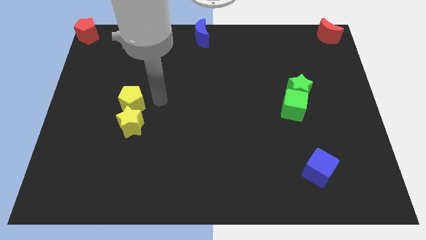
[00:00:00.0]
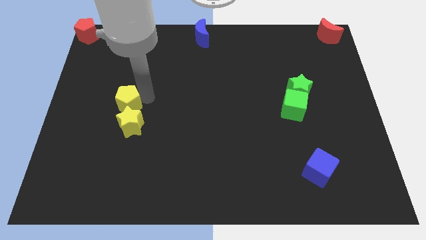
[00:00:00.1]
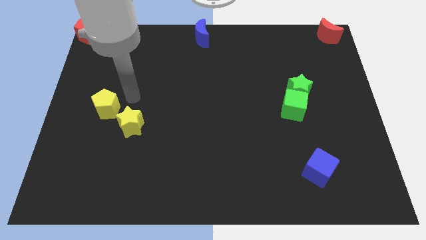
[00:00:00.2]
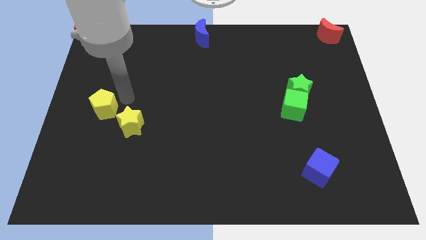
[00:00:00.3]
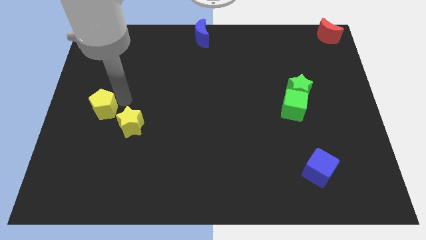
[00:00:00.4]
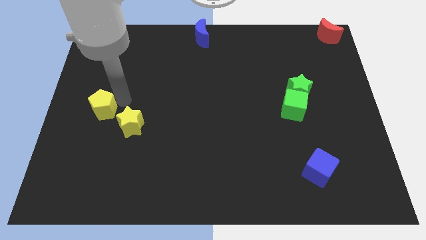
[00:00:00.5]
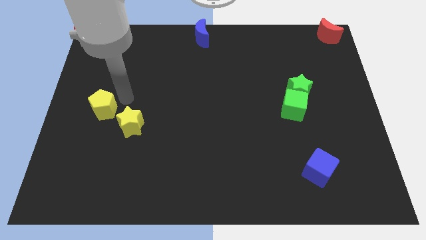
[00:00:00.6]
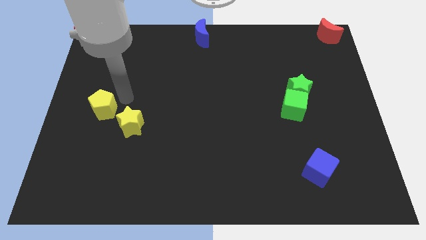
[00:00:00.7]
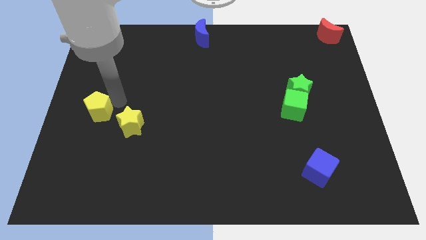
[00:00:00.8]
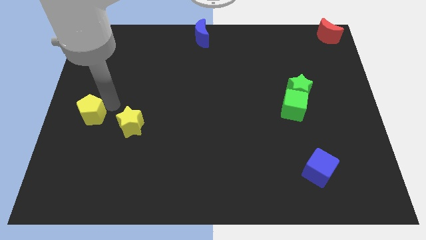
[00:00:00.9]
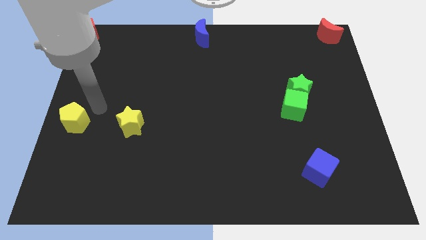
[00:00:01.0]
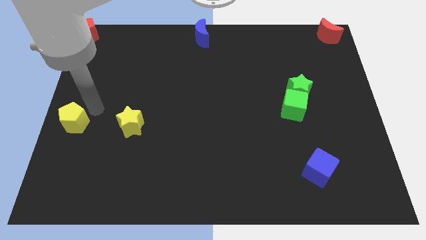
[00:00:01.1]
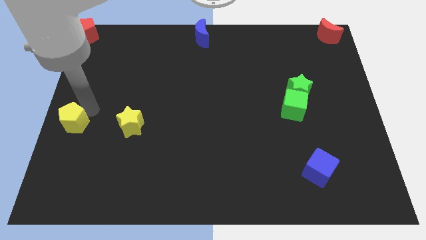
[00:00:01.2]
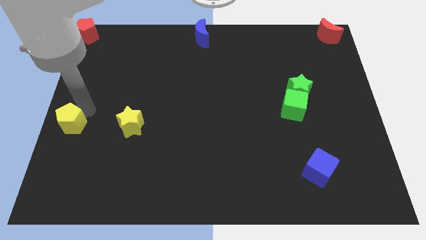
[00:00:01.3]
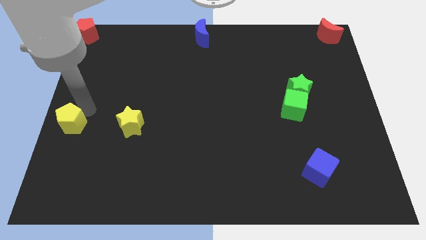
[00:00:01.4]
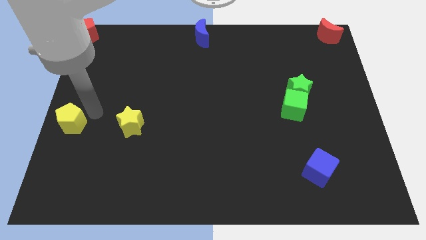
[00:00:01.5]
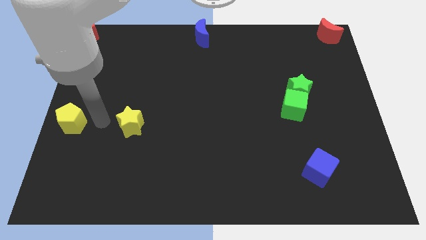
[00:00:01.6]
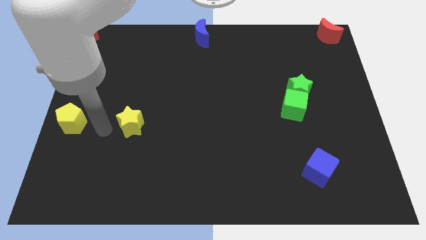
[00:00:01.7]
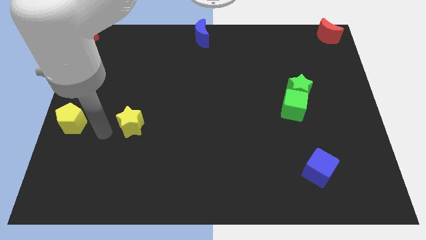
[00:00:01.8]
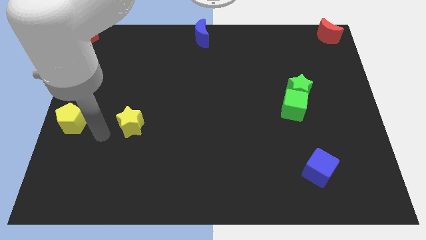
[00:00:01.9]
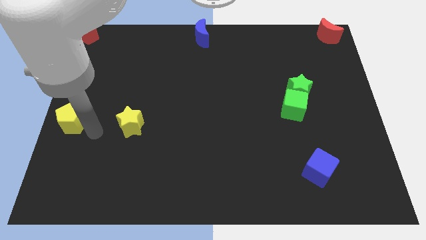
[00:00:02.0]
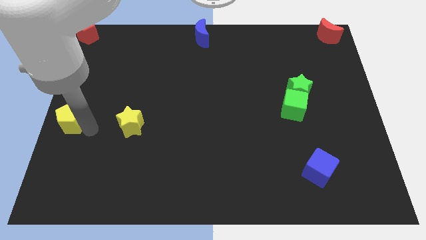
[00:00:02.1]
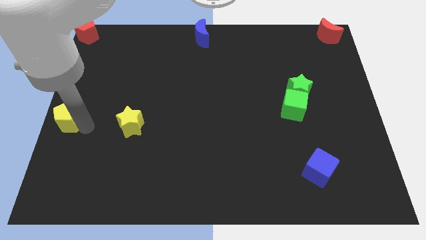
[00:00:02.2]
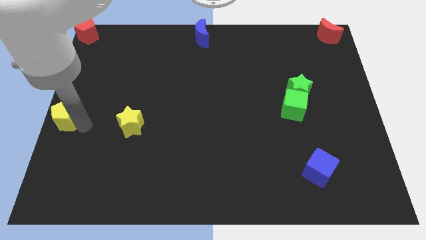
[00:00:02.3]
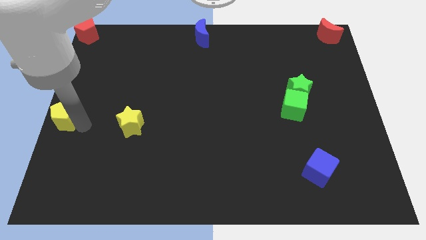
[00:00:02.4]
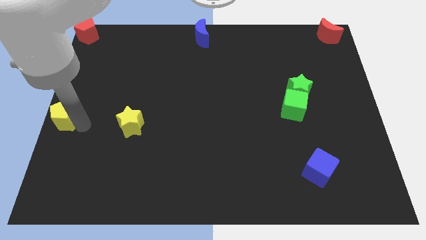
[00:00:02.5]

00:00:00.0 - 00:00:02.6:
move the yellow pentagon below the red pentagon

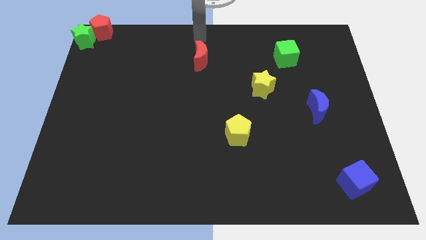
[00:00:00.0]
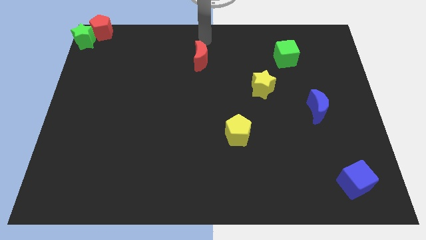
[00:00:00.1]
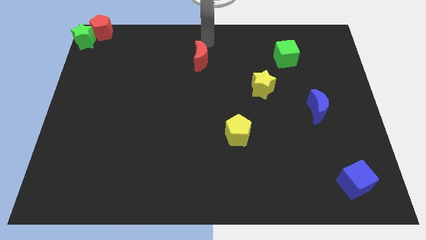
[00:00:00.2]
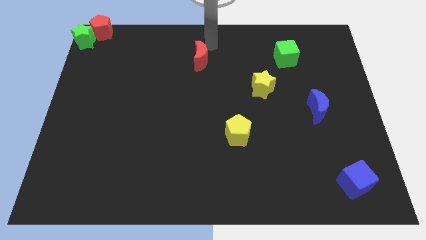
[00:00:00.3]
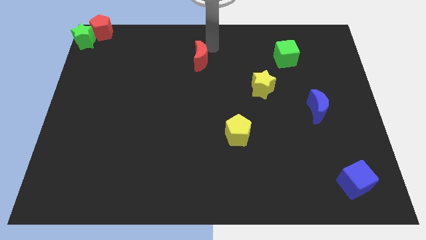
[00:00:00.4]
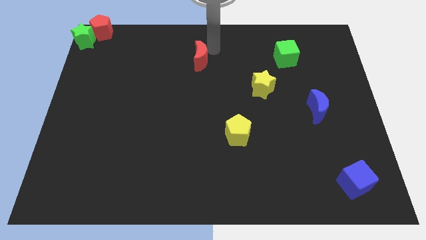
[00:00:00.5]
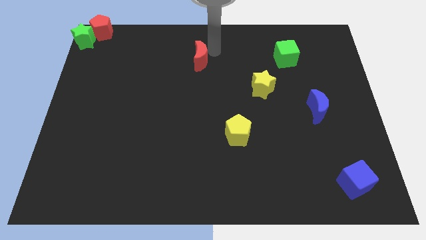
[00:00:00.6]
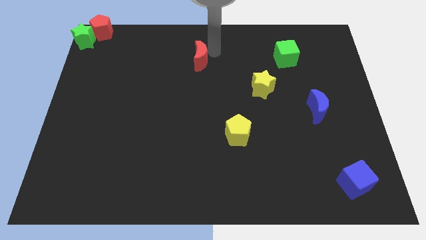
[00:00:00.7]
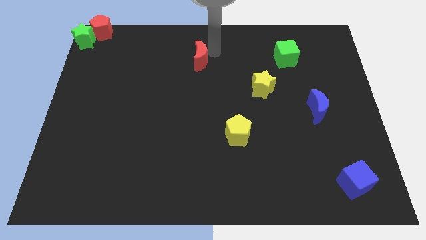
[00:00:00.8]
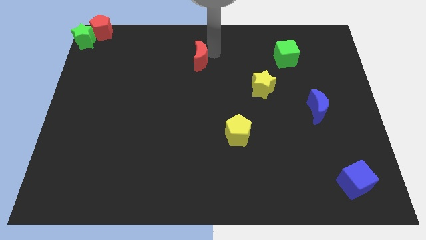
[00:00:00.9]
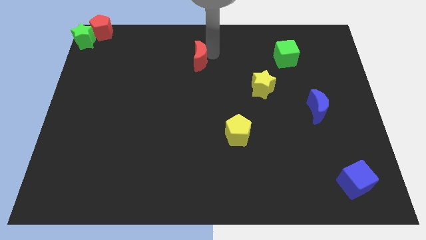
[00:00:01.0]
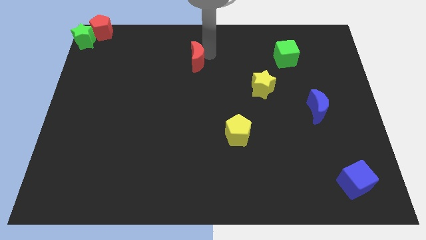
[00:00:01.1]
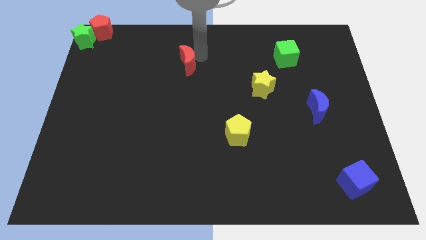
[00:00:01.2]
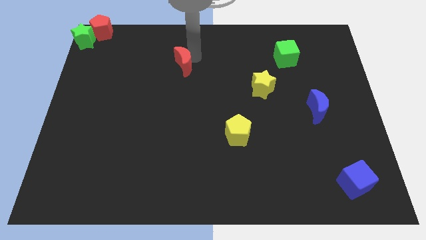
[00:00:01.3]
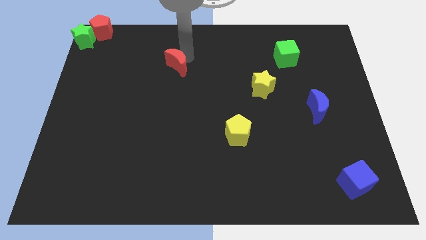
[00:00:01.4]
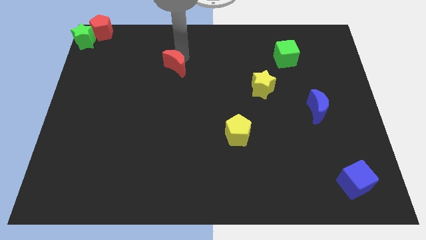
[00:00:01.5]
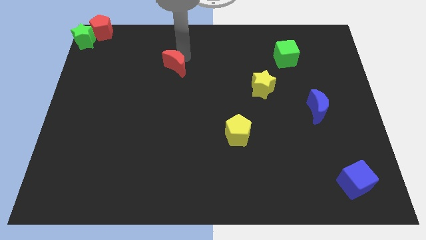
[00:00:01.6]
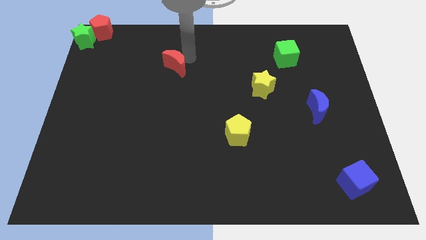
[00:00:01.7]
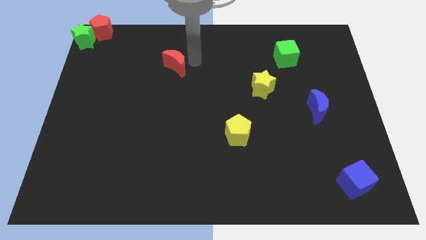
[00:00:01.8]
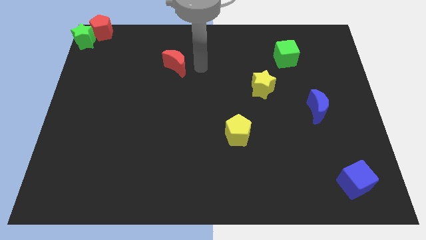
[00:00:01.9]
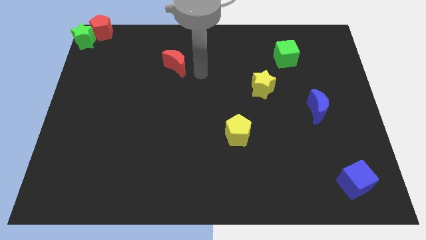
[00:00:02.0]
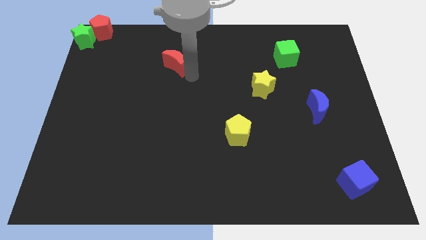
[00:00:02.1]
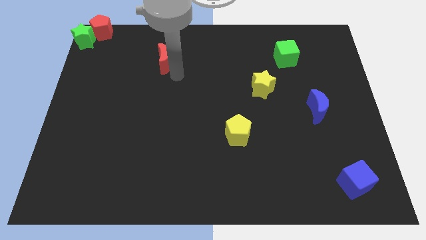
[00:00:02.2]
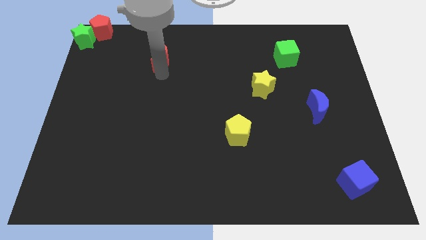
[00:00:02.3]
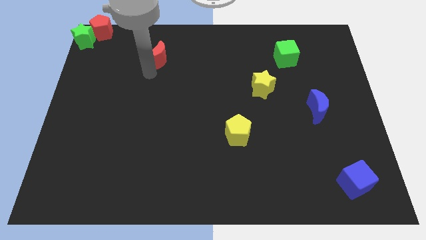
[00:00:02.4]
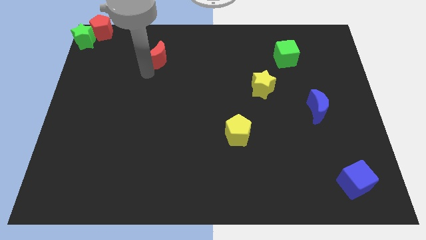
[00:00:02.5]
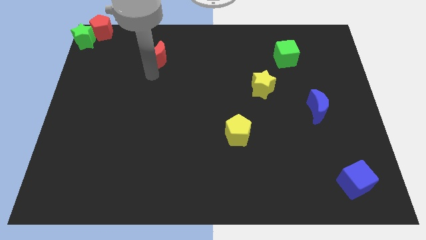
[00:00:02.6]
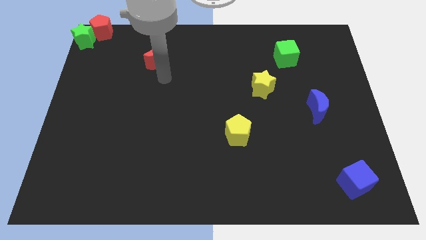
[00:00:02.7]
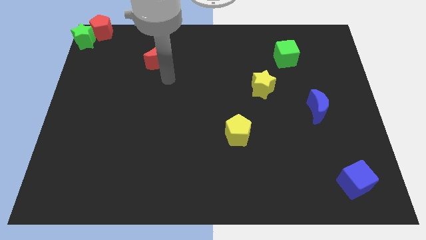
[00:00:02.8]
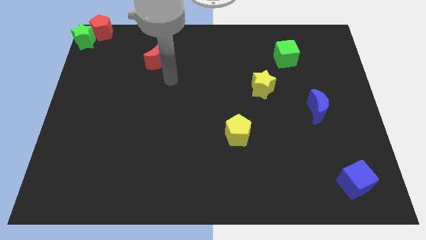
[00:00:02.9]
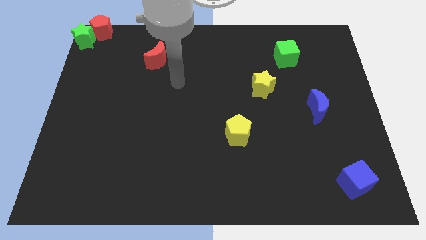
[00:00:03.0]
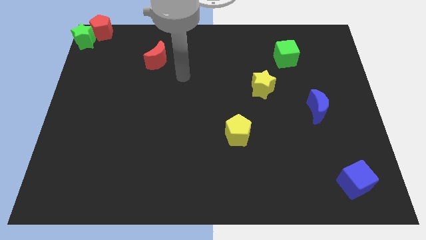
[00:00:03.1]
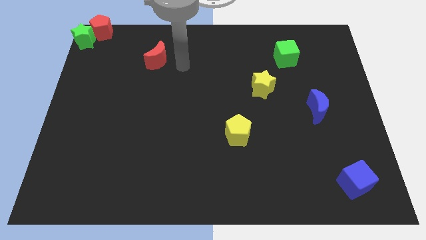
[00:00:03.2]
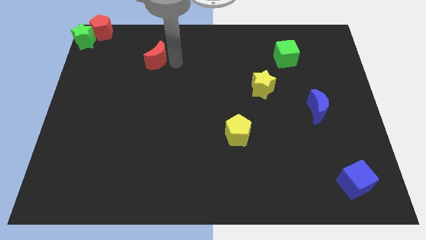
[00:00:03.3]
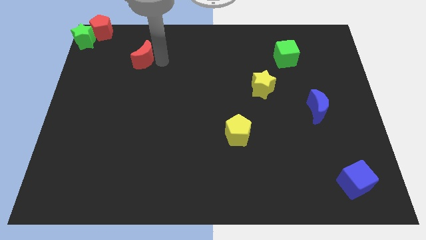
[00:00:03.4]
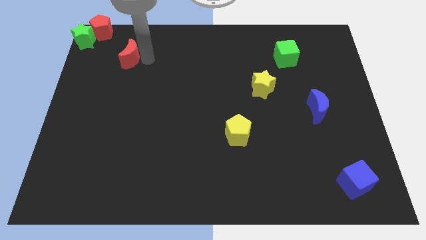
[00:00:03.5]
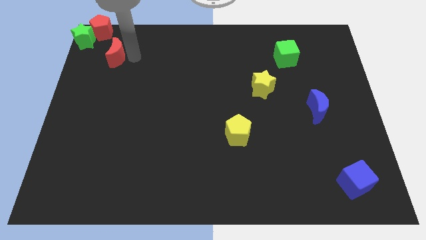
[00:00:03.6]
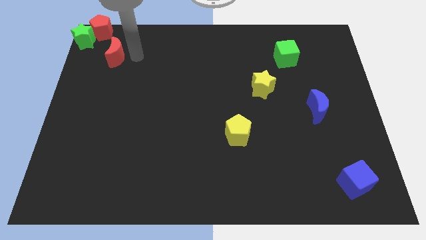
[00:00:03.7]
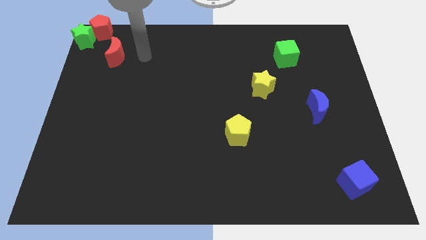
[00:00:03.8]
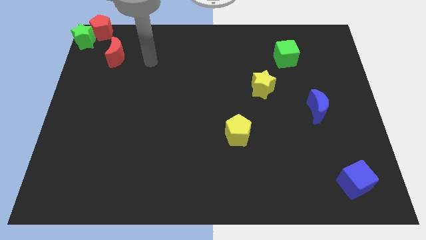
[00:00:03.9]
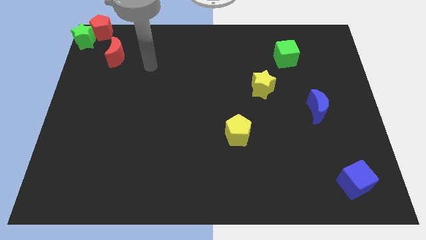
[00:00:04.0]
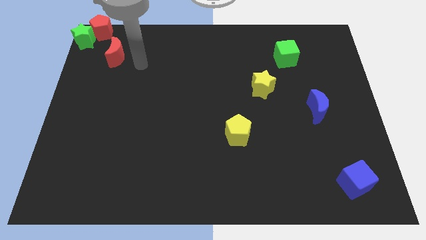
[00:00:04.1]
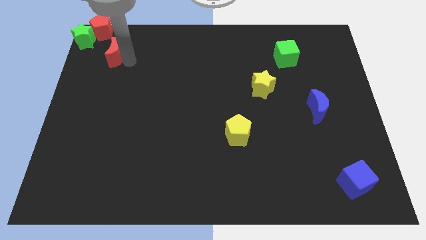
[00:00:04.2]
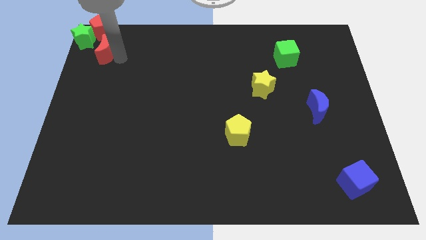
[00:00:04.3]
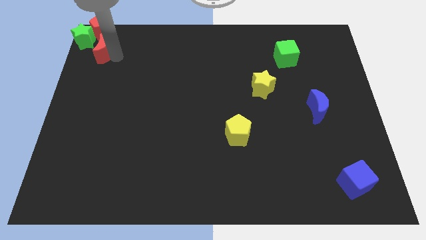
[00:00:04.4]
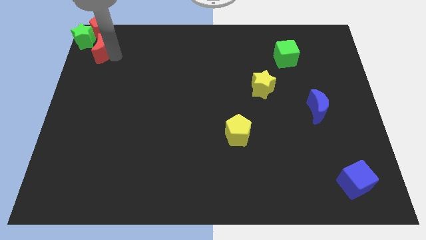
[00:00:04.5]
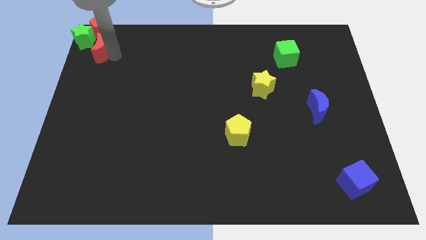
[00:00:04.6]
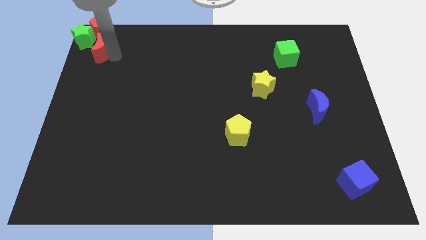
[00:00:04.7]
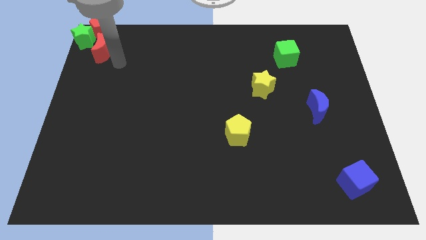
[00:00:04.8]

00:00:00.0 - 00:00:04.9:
push the red crescent to the top left of the board

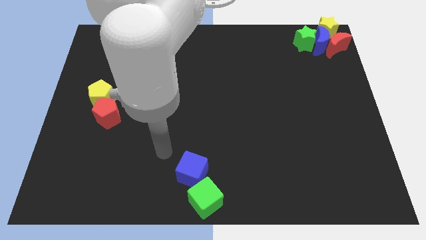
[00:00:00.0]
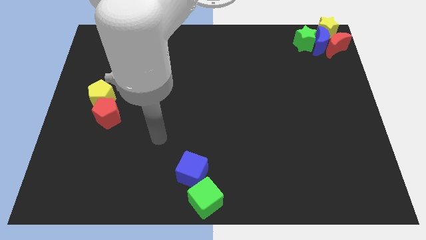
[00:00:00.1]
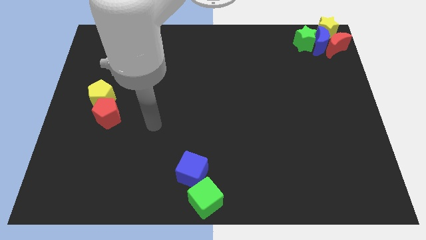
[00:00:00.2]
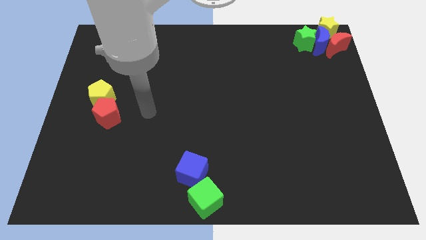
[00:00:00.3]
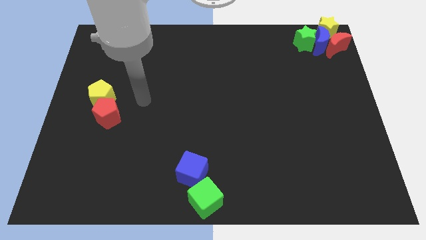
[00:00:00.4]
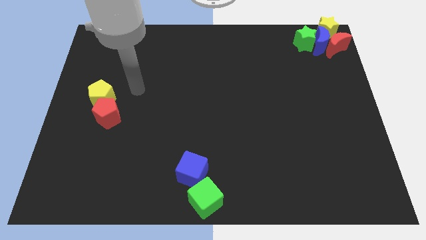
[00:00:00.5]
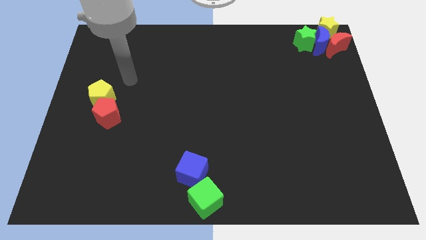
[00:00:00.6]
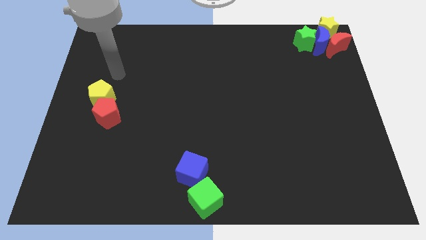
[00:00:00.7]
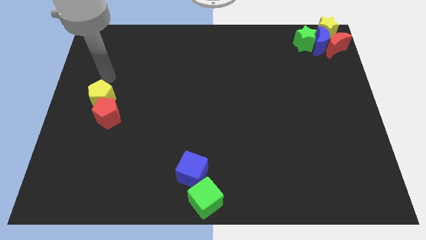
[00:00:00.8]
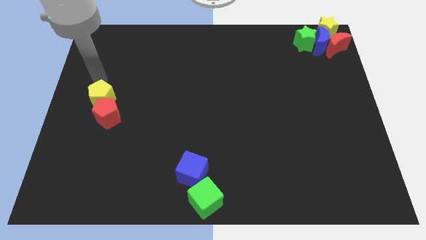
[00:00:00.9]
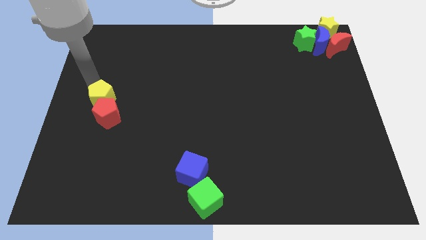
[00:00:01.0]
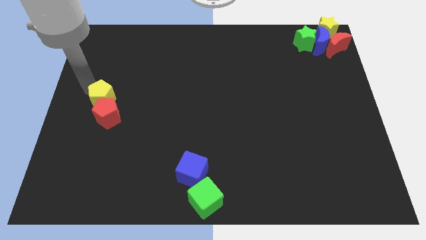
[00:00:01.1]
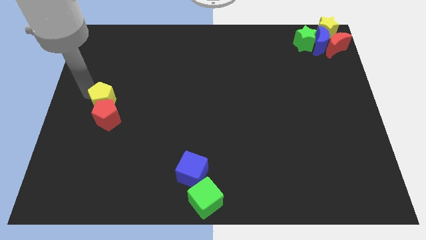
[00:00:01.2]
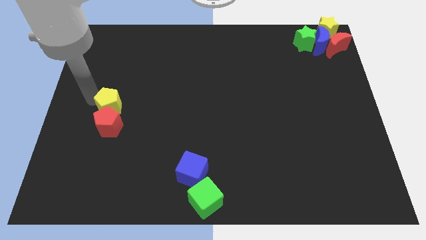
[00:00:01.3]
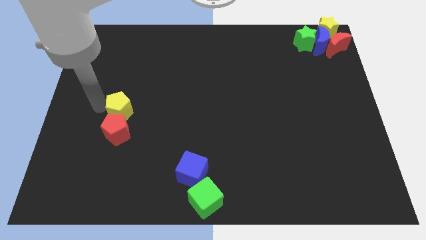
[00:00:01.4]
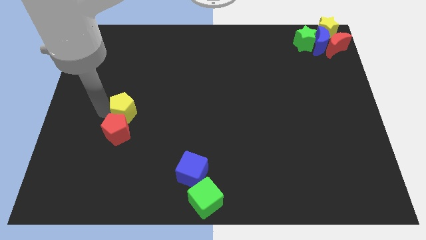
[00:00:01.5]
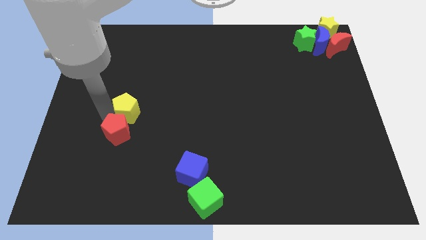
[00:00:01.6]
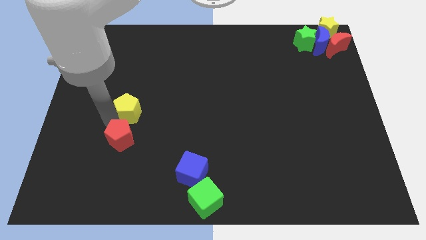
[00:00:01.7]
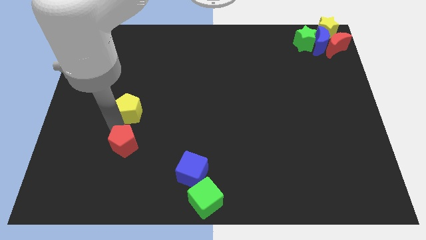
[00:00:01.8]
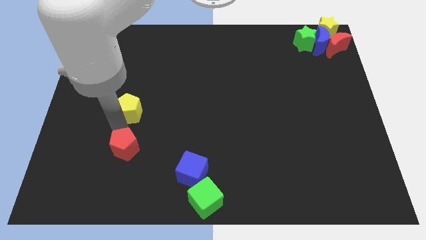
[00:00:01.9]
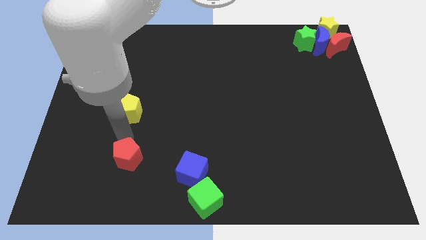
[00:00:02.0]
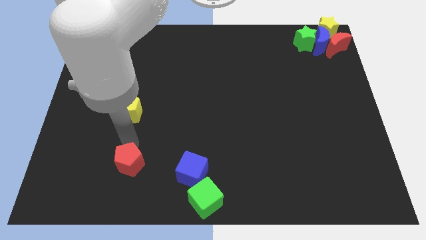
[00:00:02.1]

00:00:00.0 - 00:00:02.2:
separate the red pentagon from yellow pentagon
